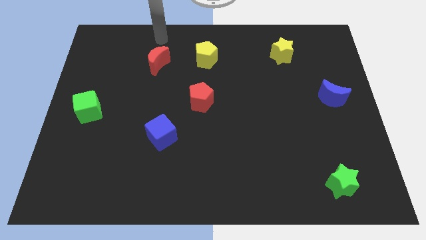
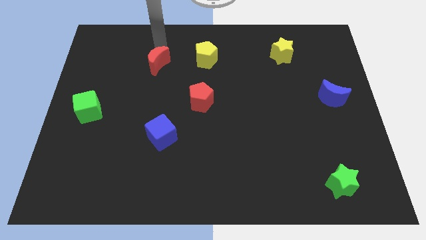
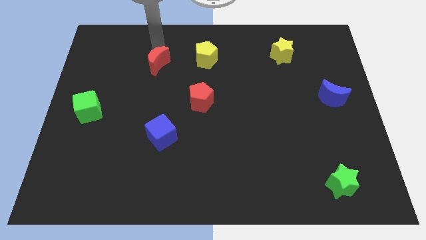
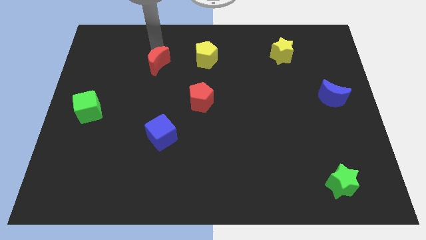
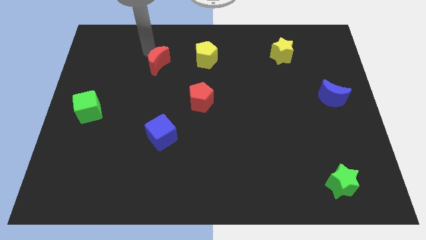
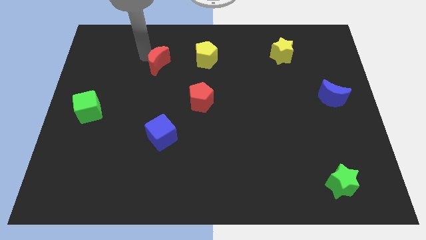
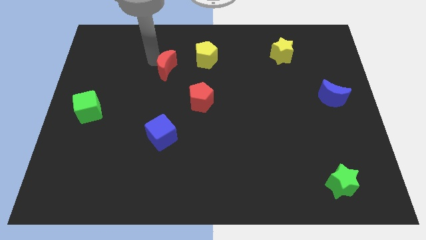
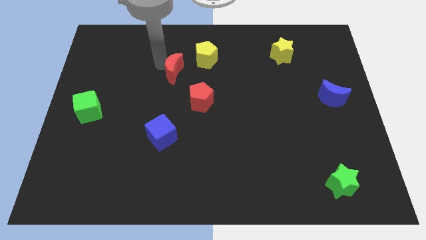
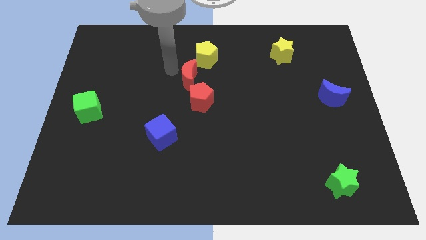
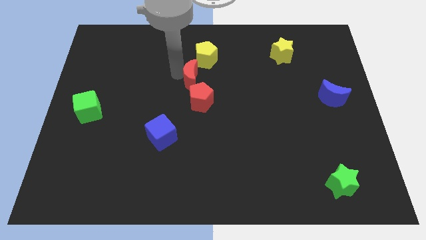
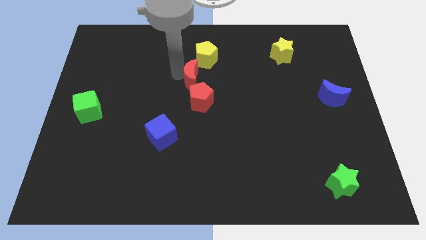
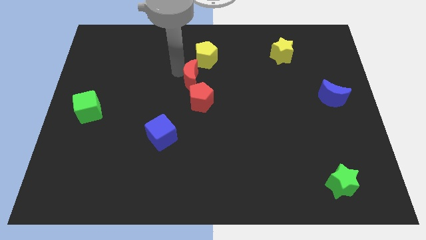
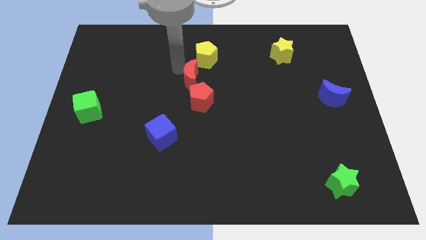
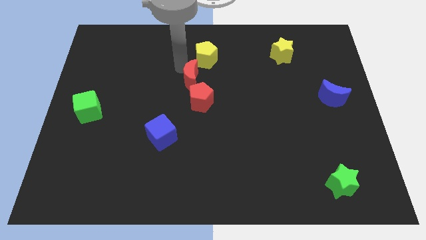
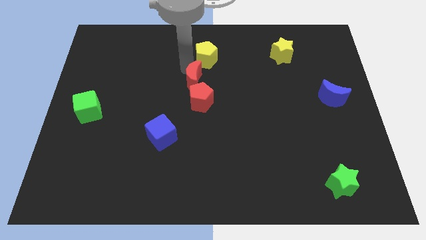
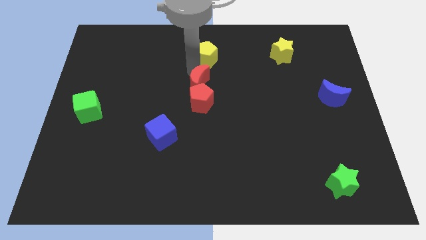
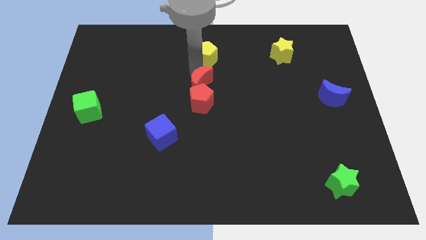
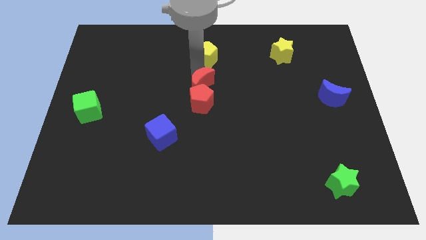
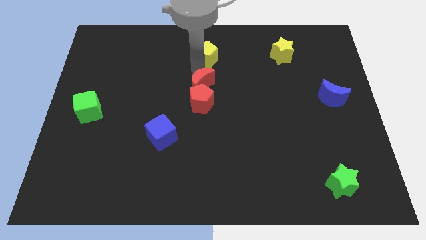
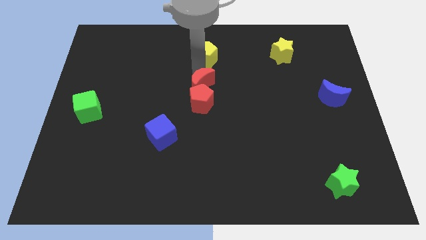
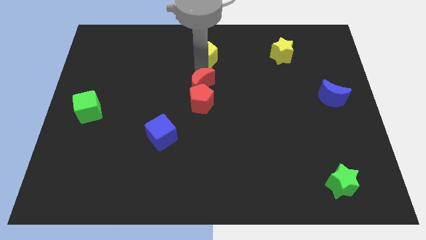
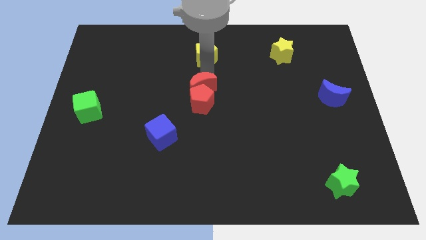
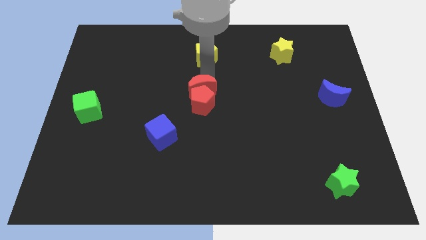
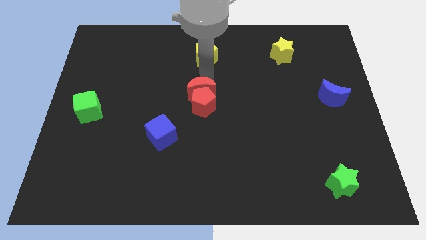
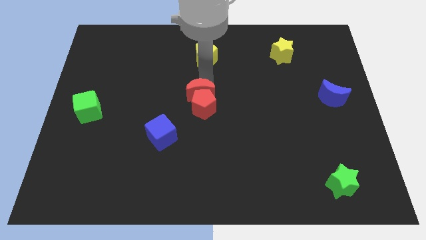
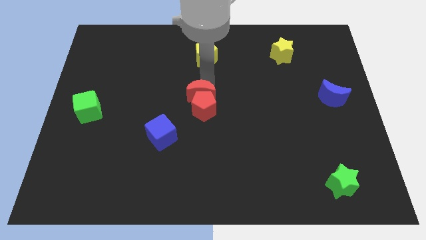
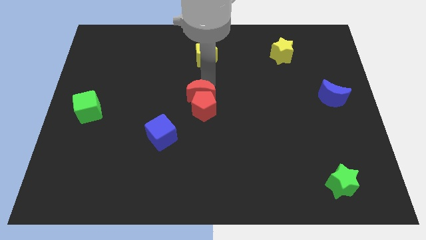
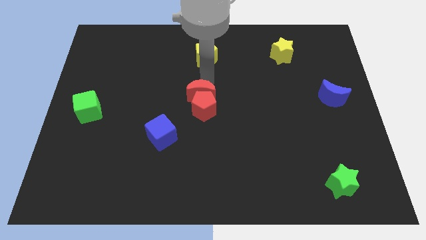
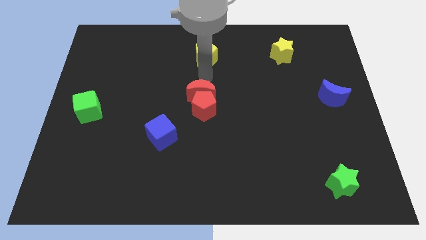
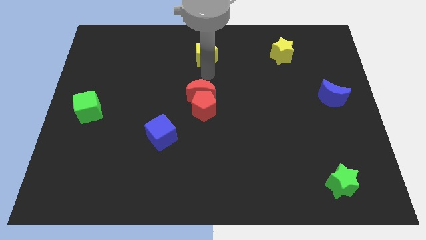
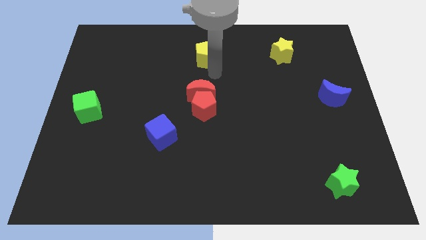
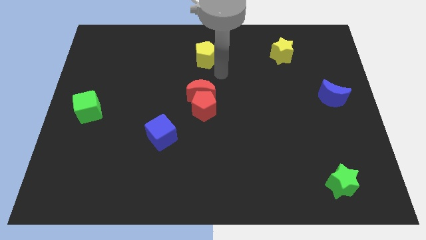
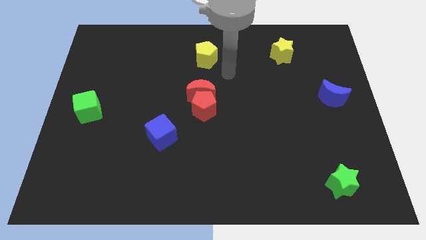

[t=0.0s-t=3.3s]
push the red moon into the red pentagon

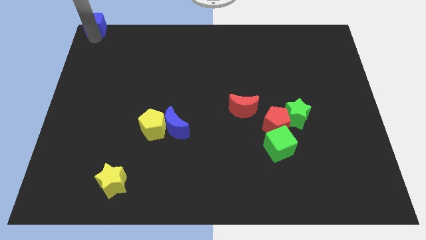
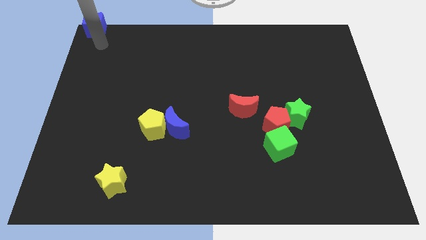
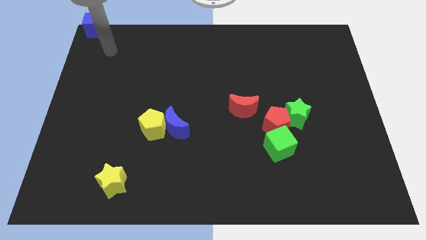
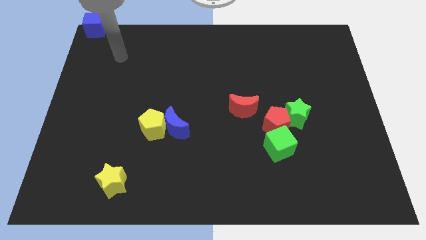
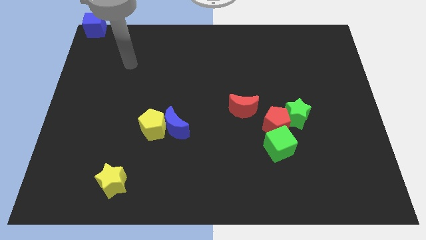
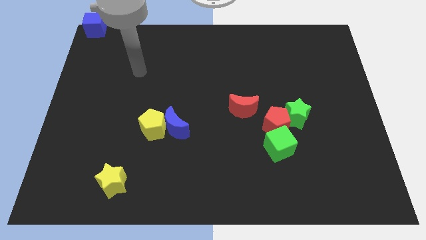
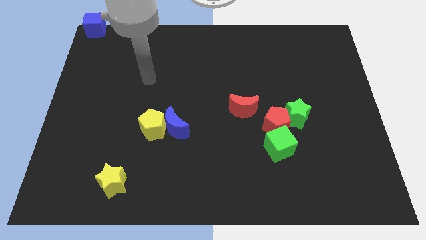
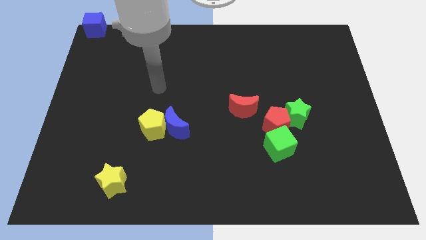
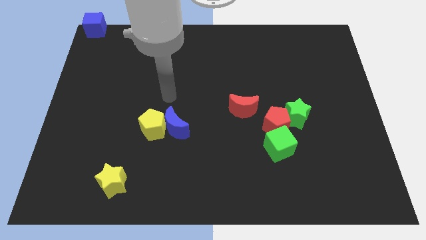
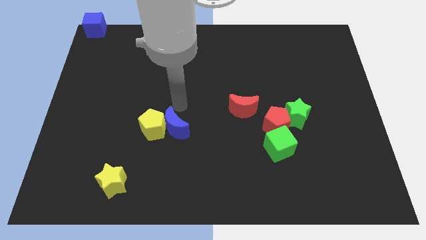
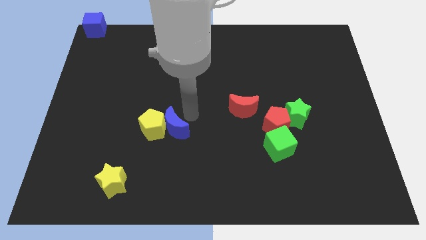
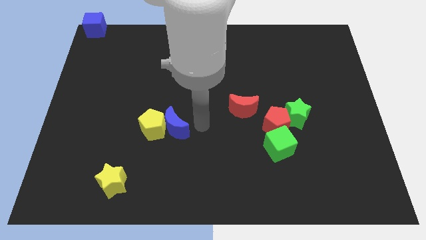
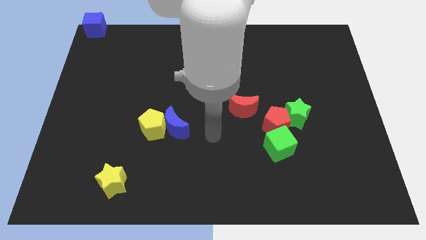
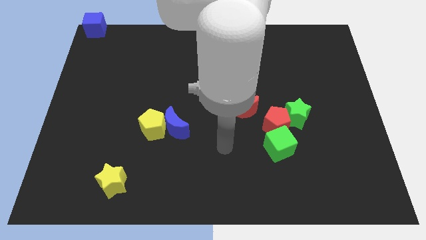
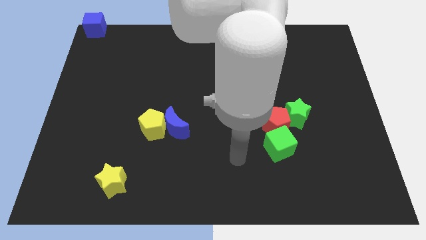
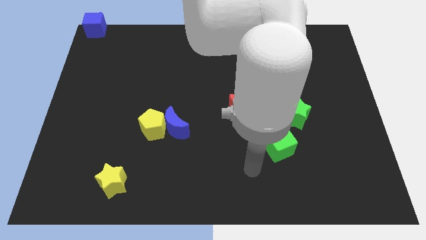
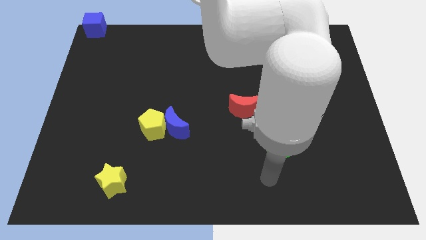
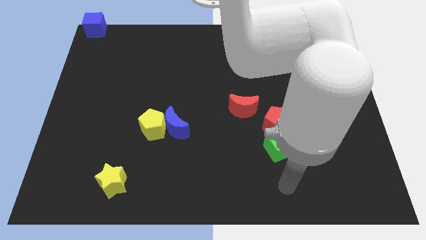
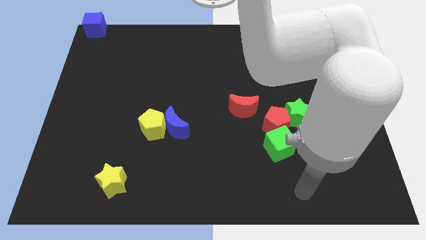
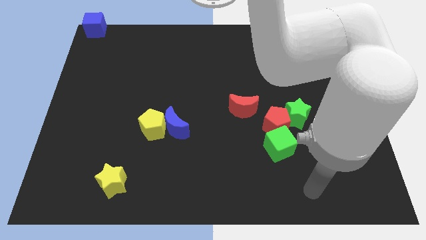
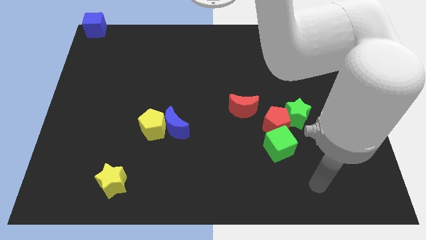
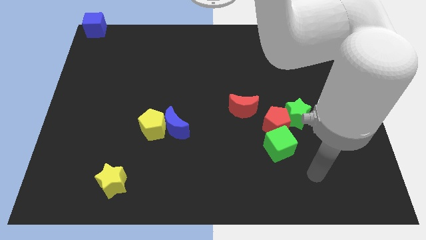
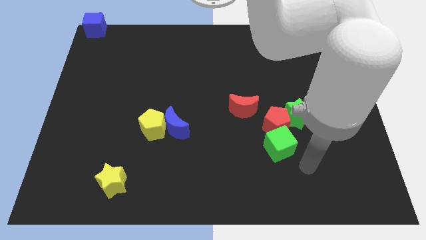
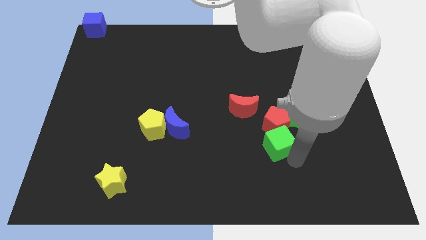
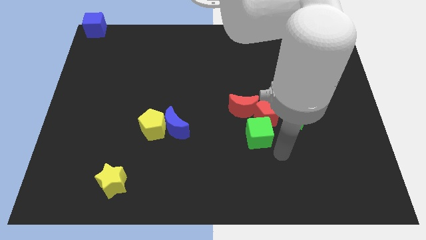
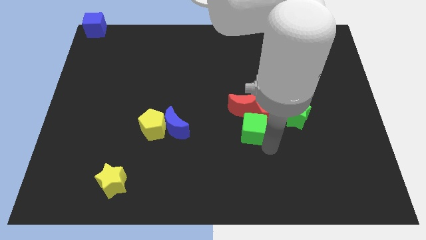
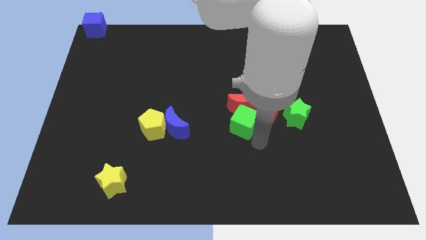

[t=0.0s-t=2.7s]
move your arm away from the blue cube

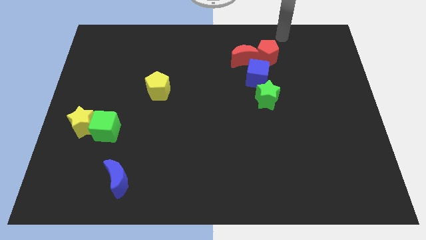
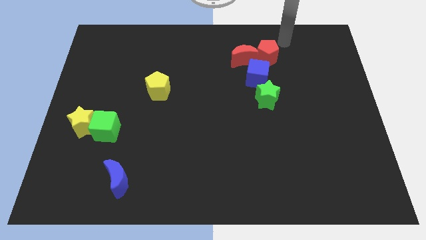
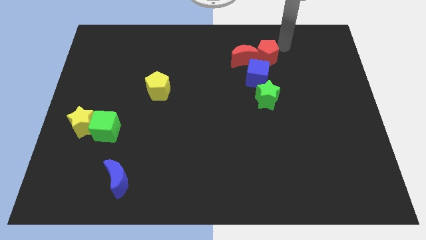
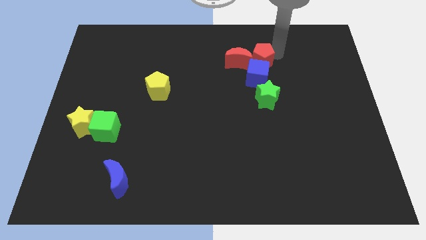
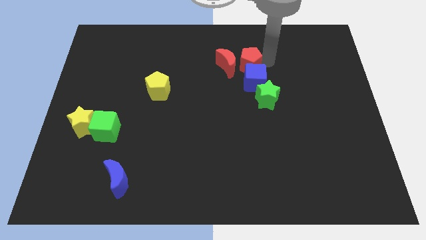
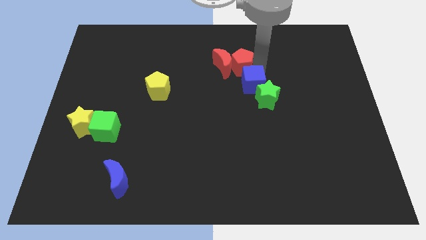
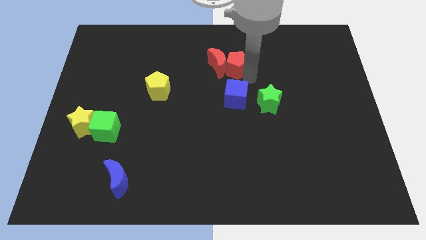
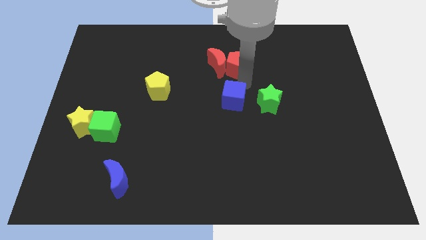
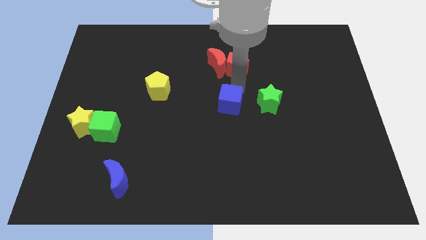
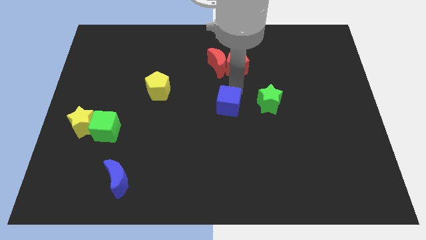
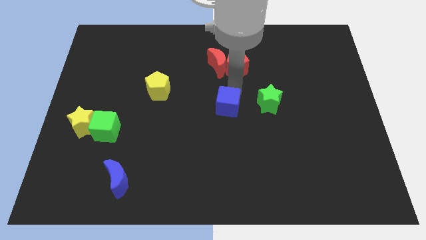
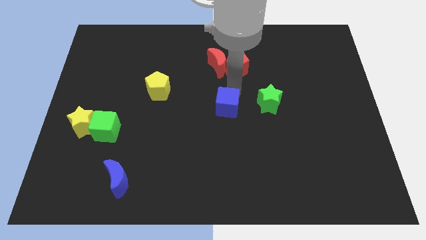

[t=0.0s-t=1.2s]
separate blue cube from red blocks

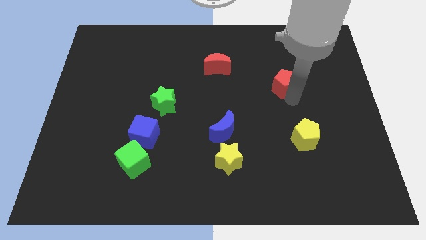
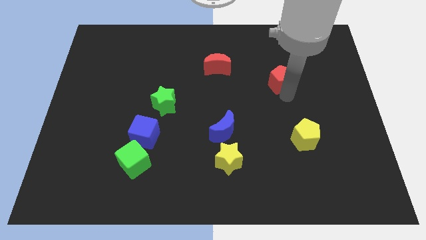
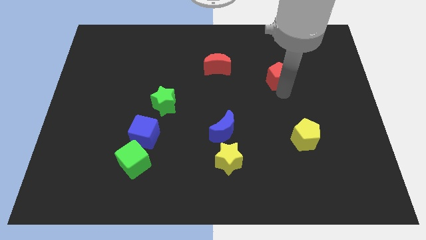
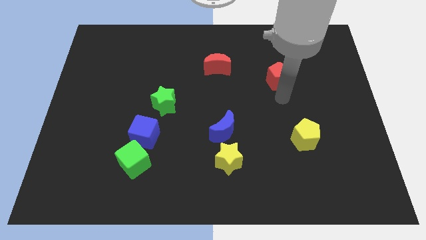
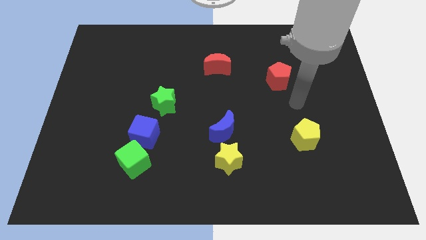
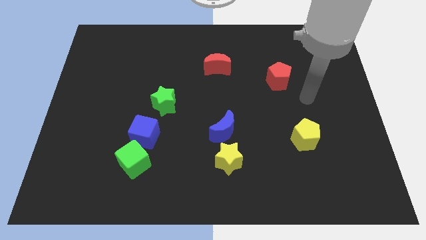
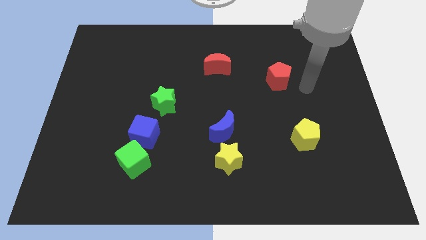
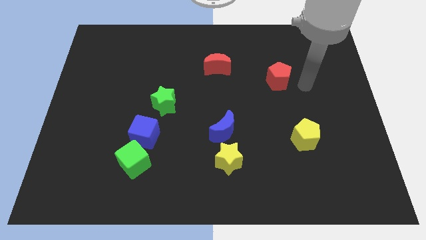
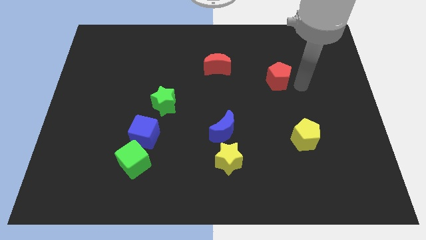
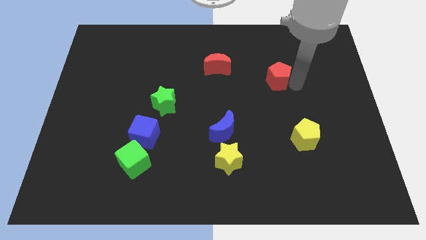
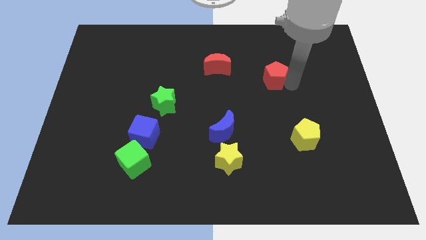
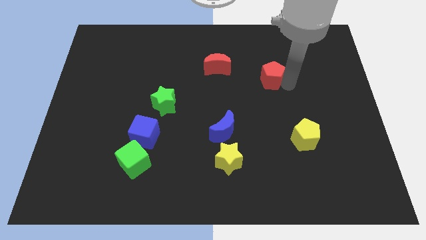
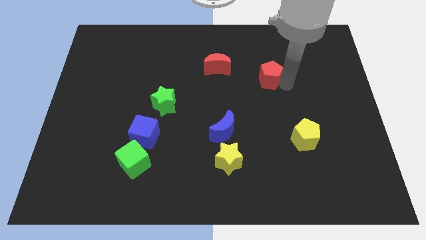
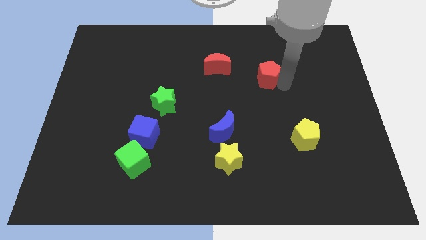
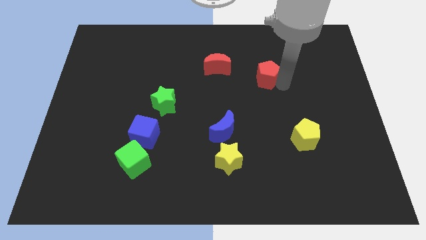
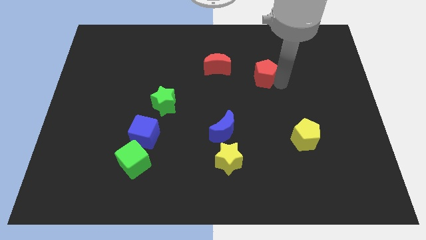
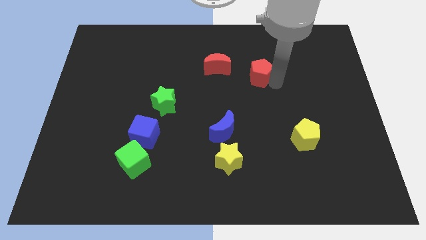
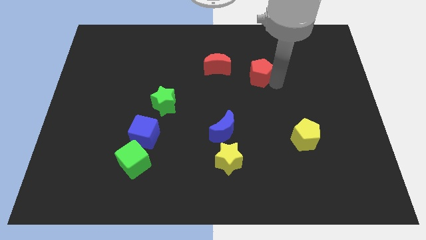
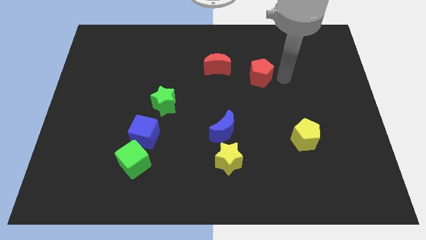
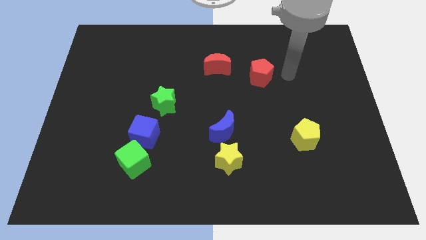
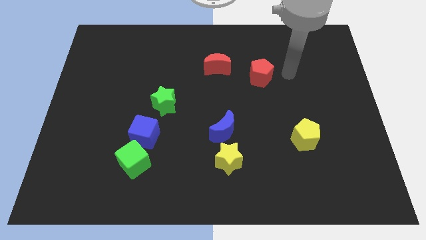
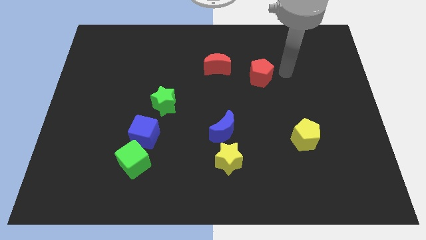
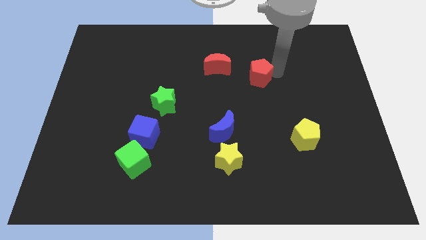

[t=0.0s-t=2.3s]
move red pentagon to the right of red moon
